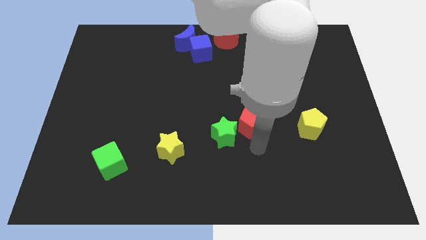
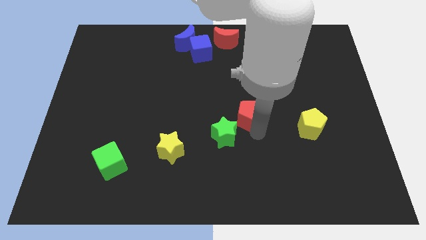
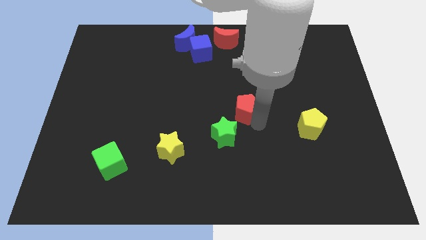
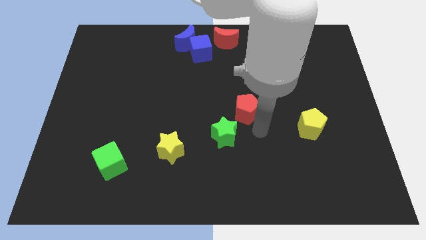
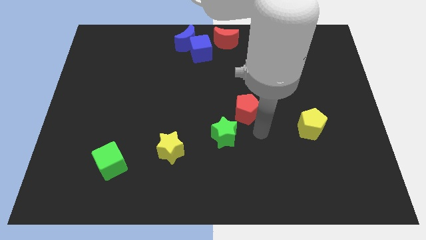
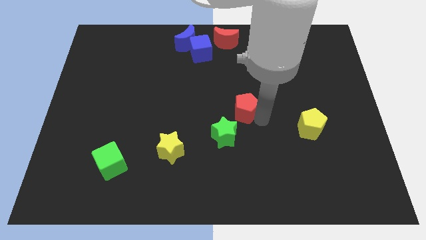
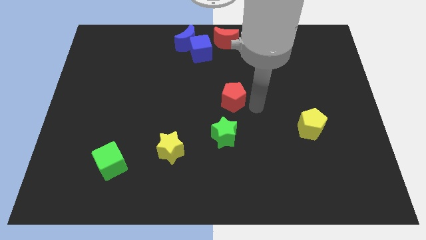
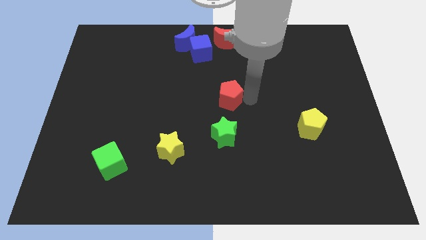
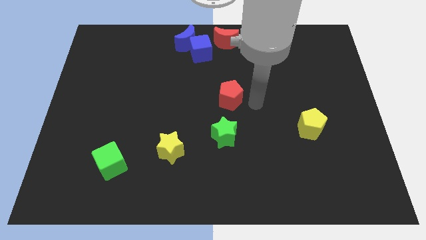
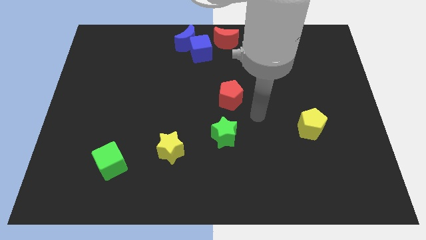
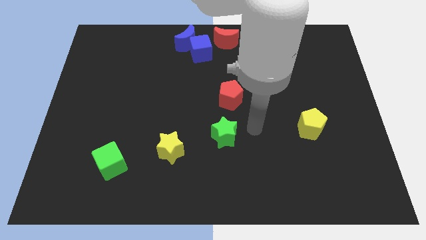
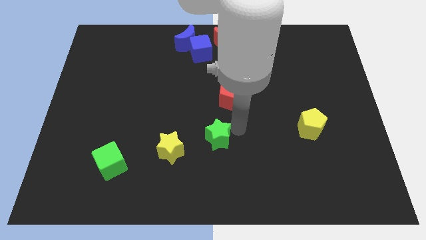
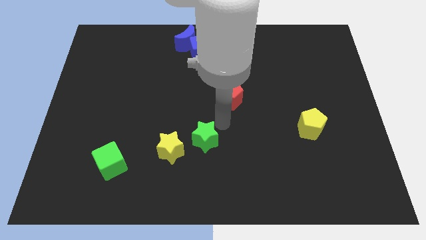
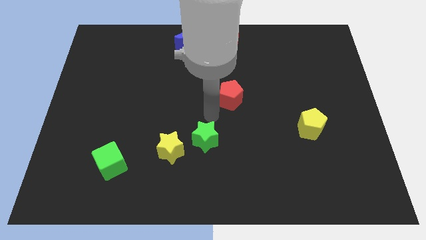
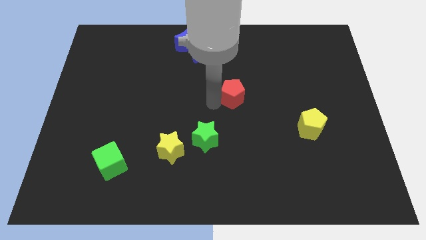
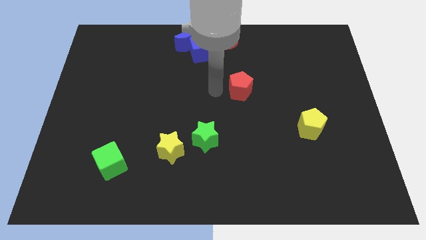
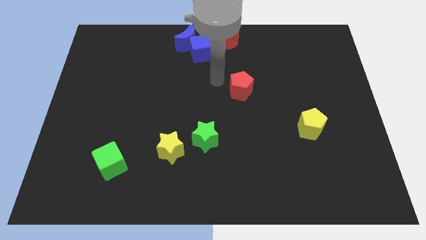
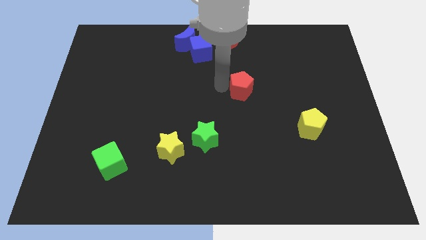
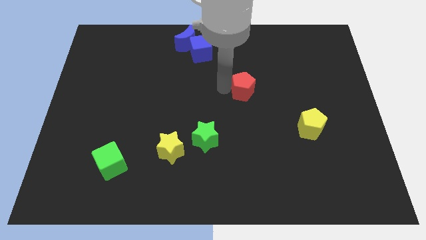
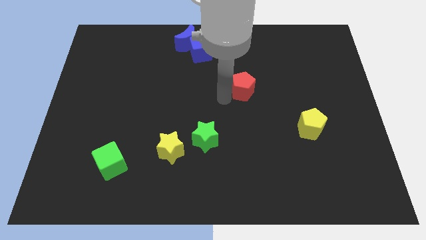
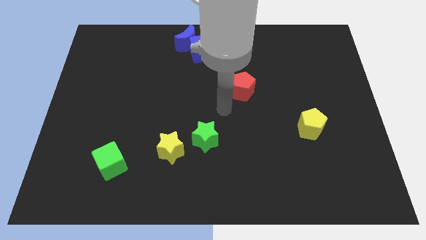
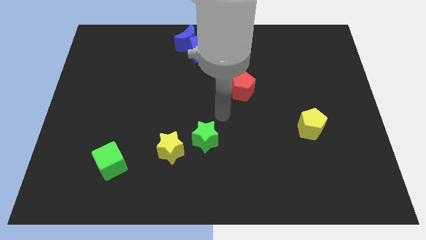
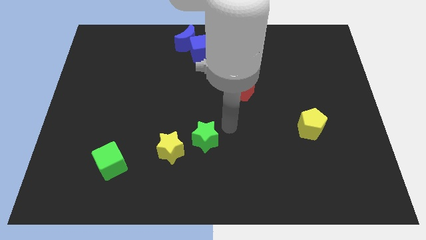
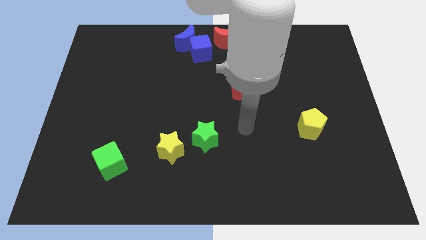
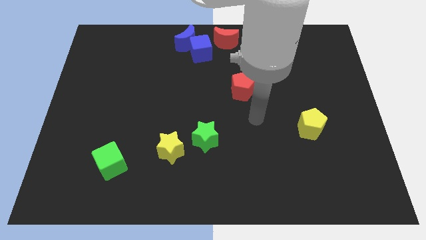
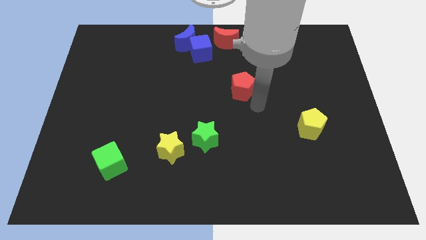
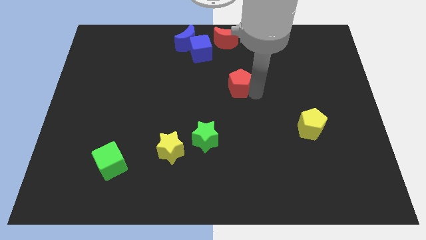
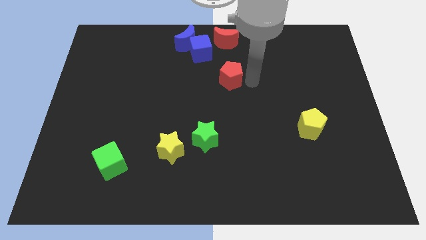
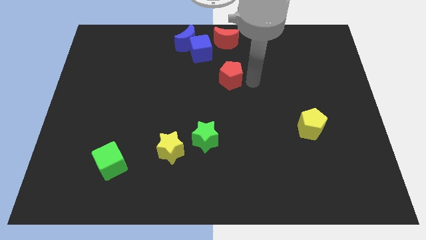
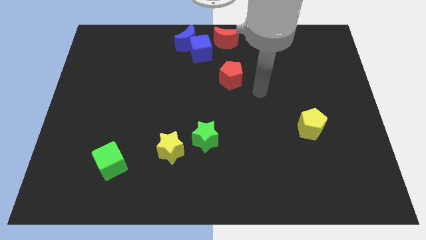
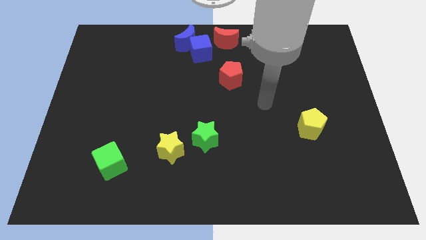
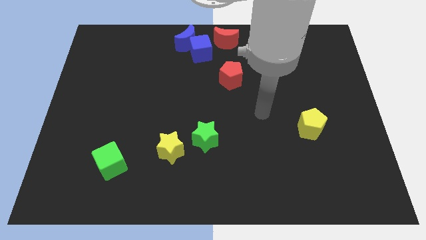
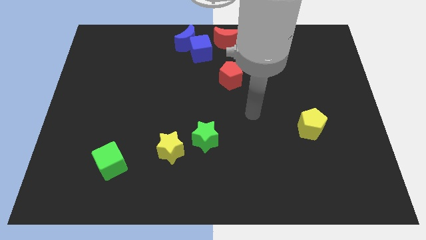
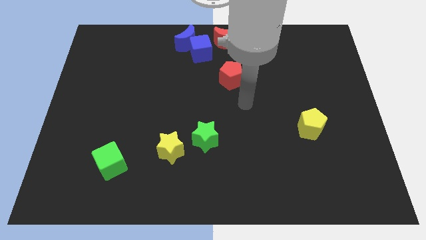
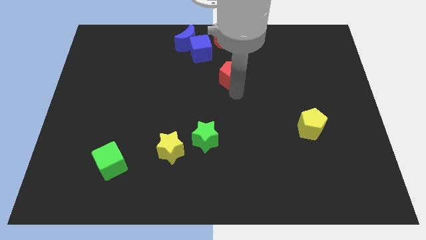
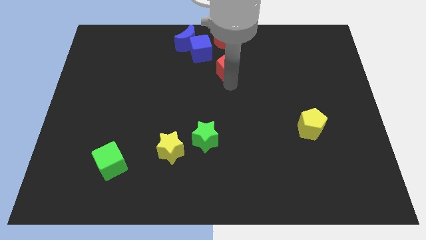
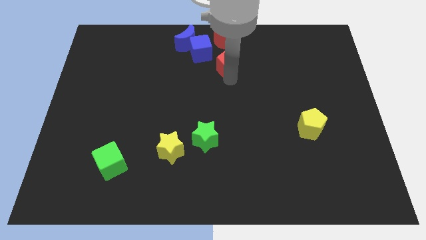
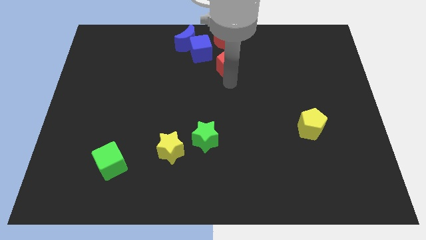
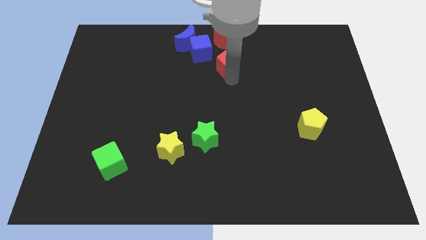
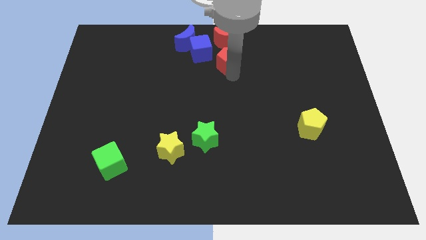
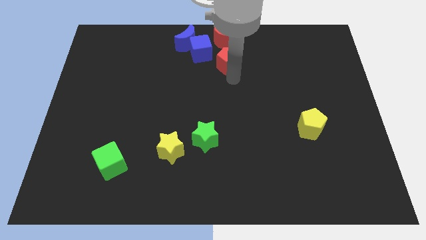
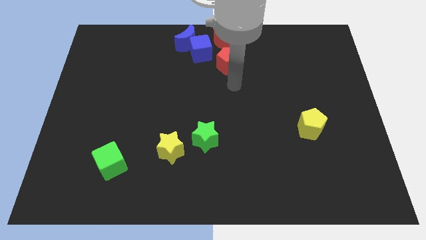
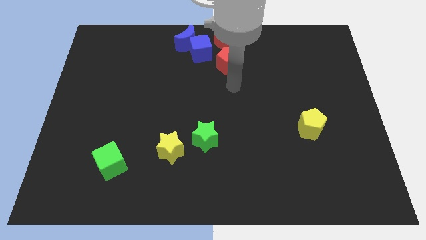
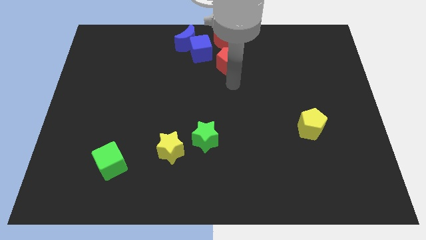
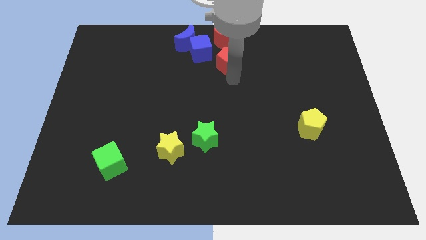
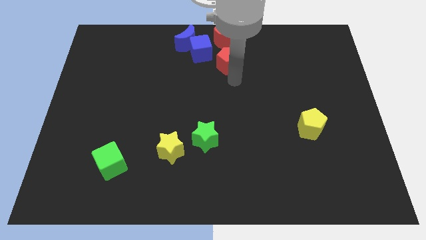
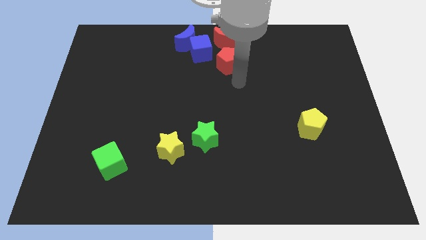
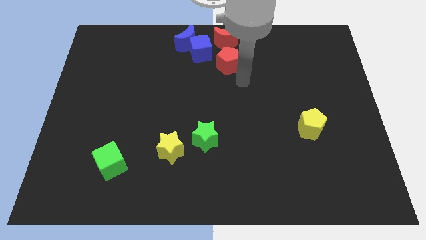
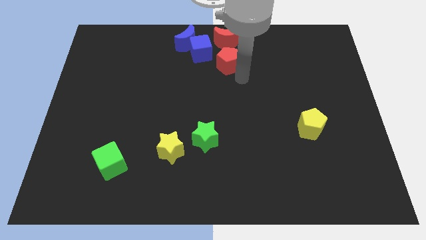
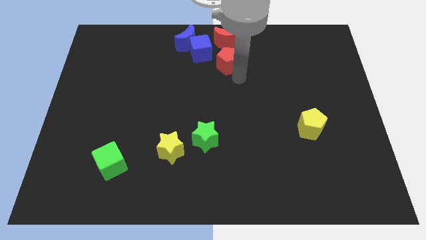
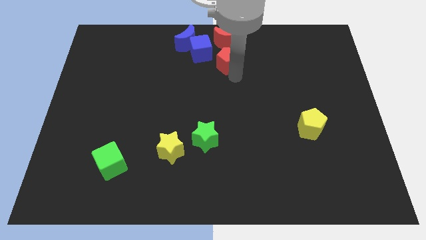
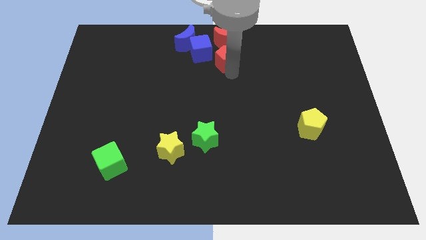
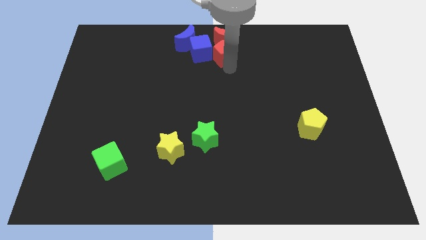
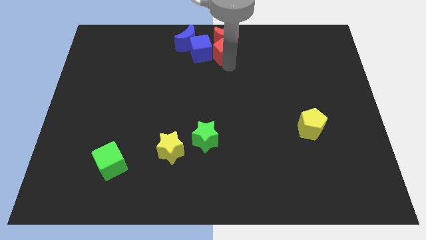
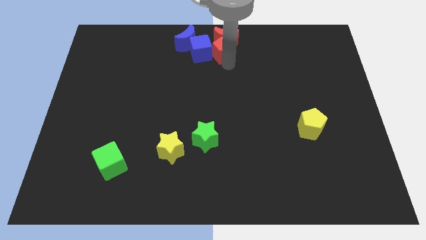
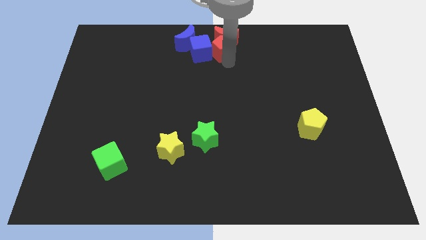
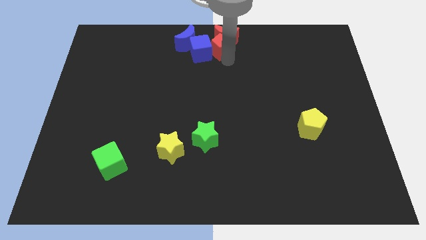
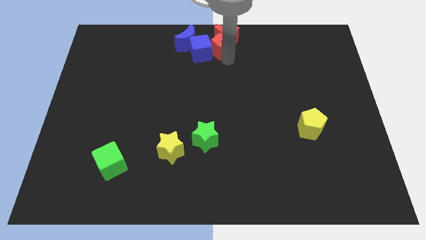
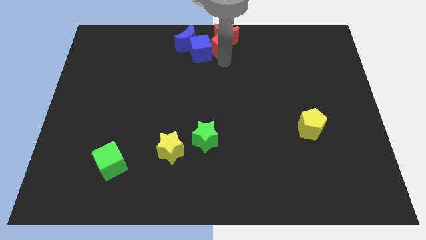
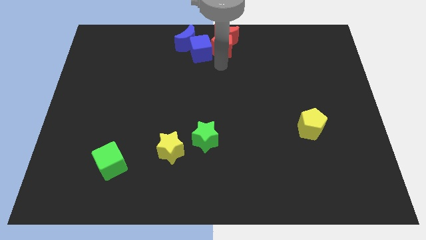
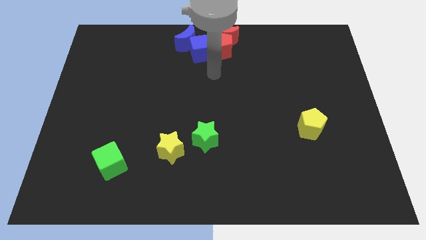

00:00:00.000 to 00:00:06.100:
push the red pentagon into the red moon

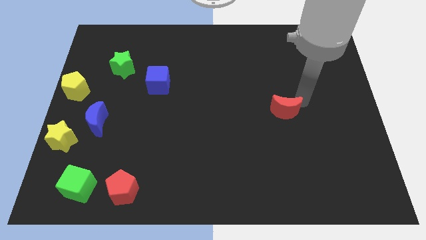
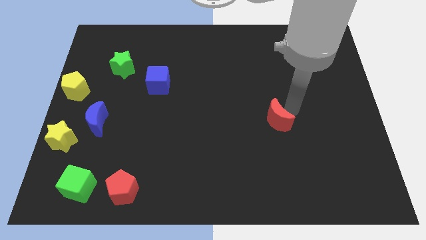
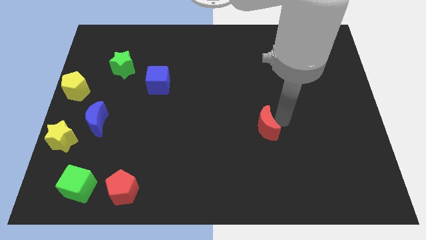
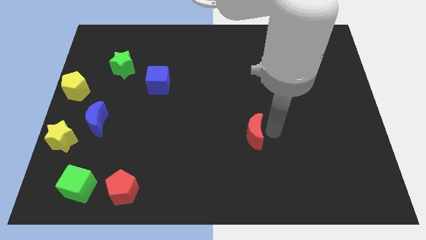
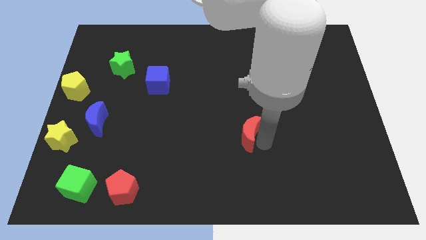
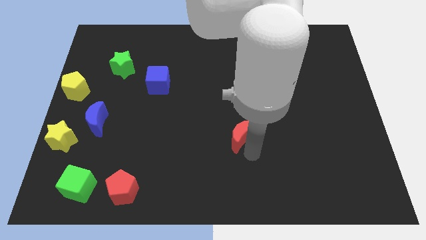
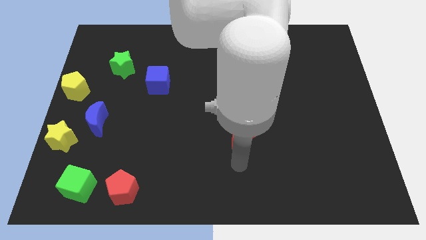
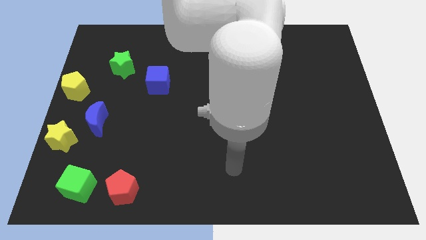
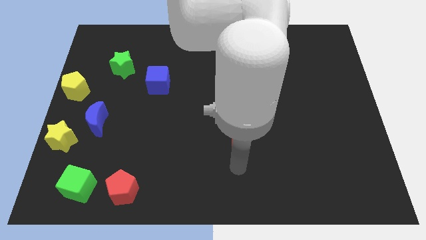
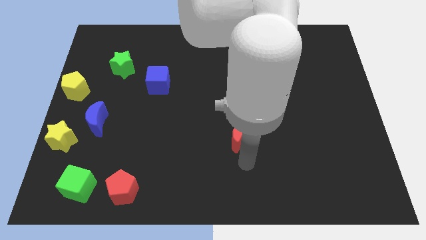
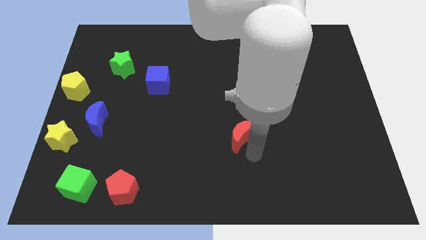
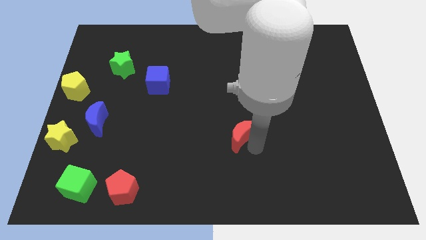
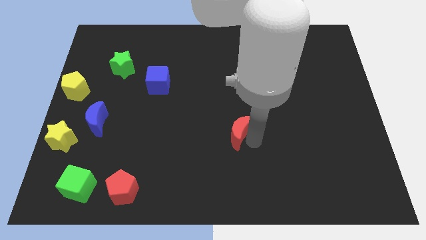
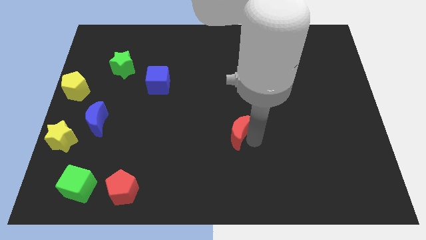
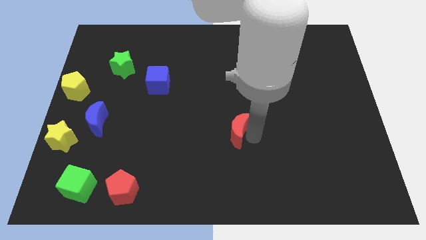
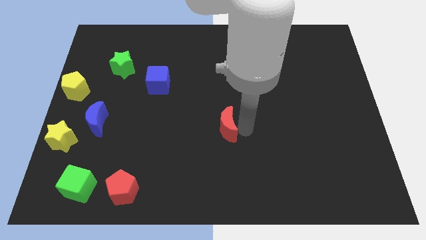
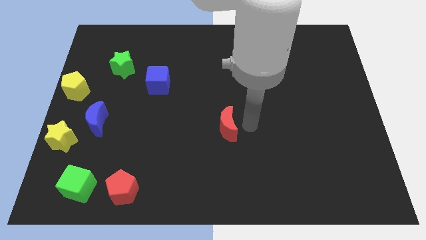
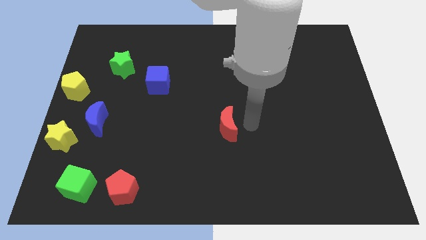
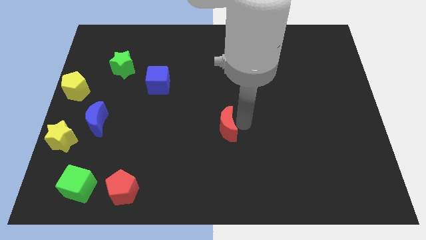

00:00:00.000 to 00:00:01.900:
slide the red moon to the left of the board

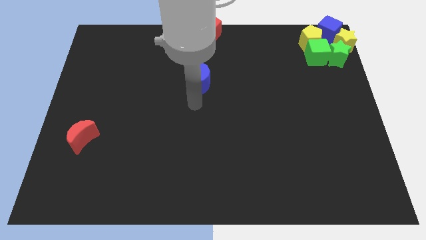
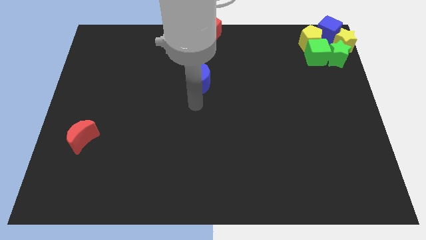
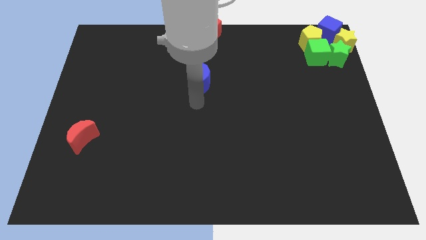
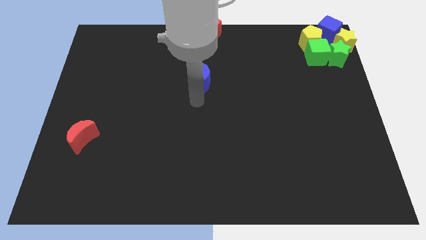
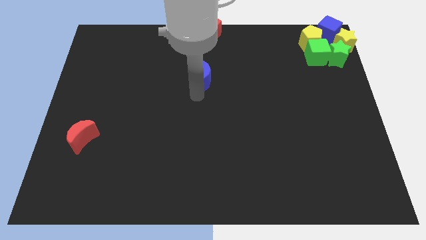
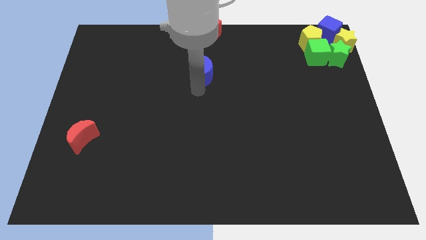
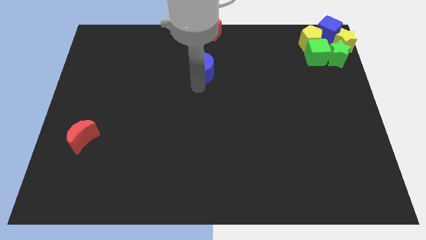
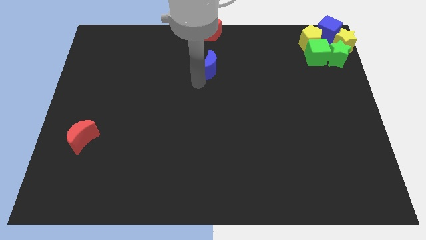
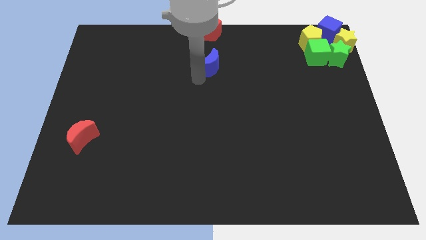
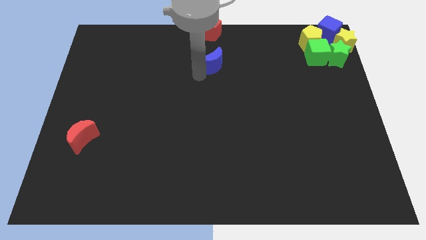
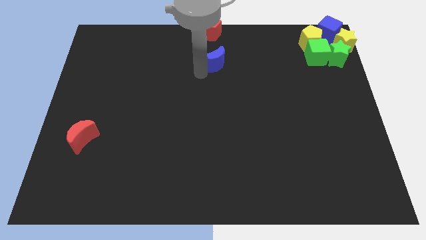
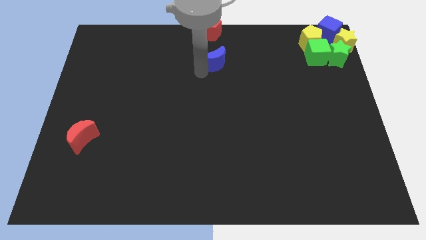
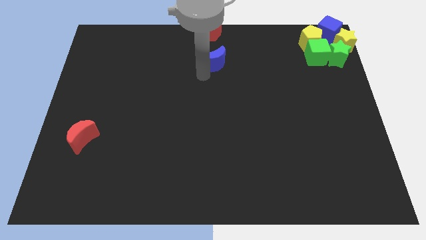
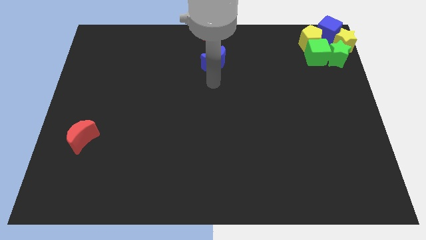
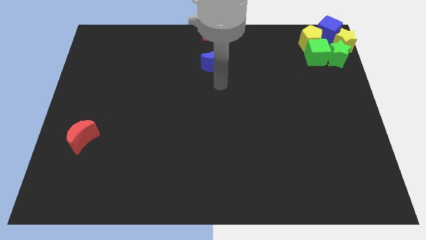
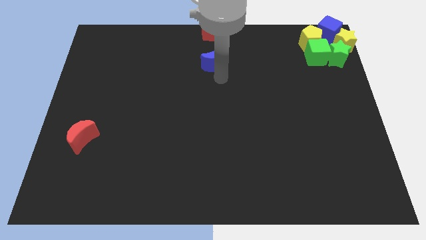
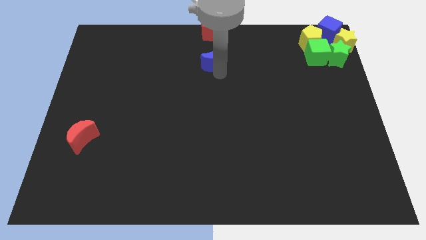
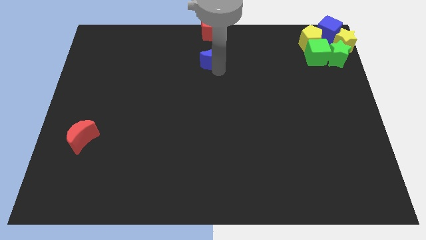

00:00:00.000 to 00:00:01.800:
move the blue moon below the red pentagon
